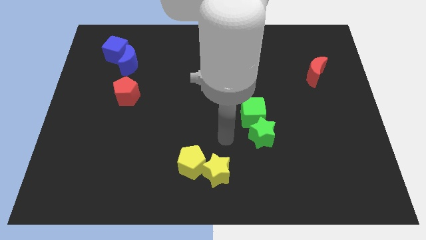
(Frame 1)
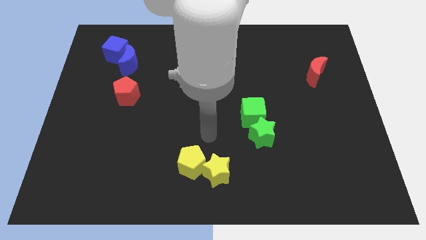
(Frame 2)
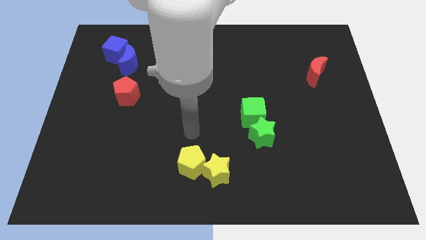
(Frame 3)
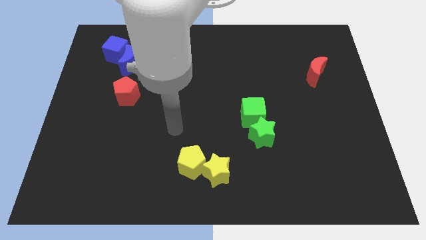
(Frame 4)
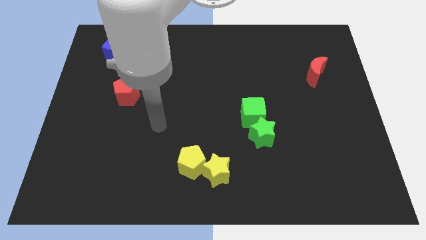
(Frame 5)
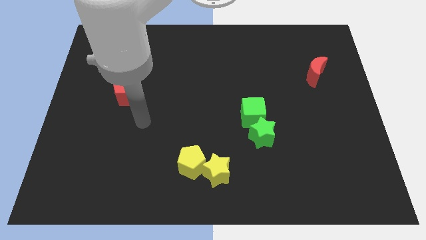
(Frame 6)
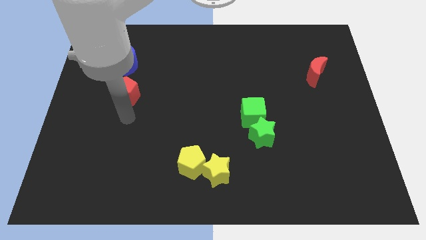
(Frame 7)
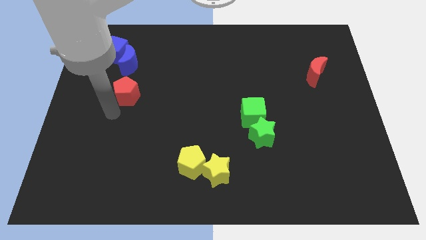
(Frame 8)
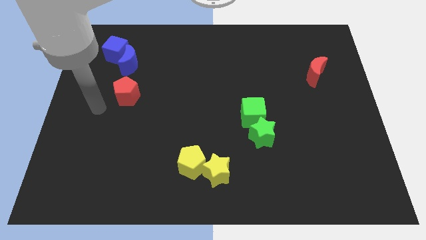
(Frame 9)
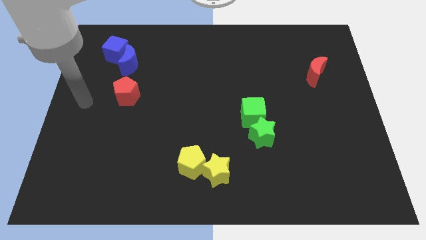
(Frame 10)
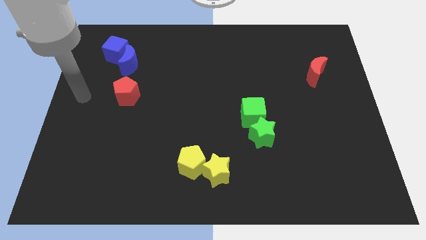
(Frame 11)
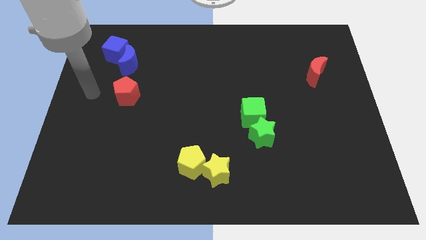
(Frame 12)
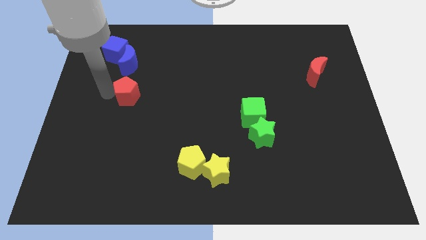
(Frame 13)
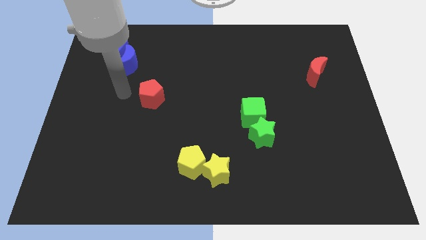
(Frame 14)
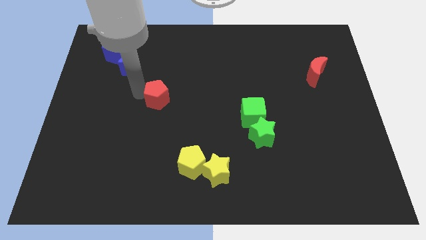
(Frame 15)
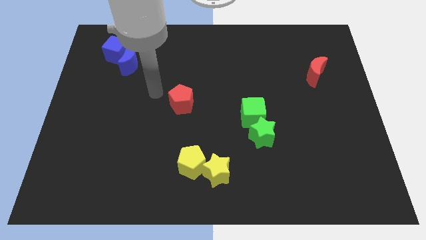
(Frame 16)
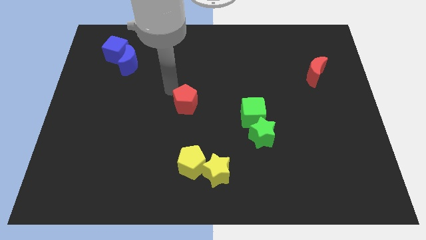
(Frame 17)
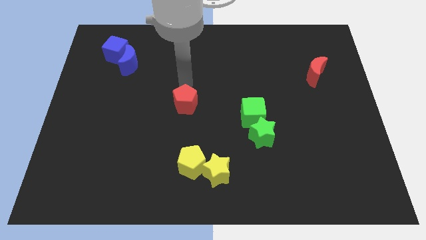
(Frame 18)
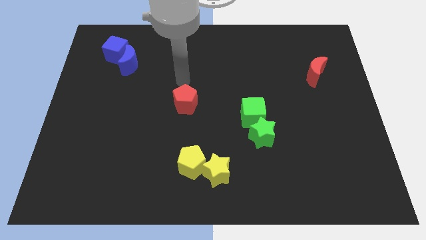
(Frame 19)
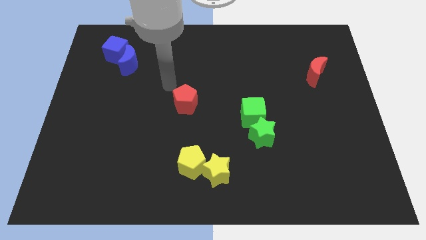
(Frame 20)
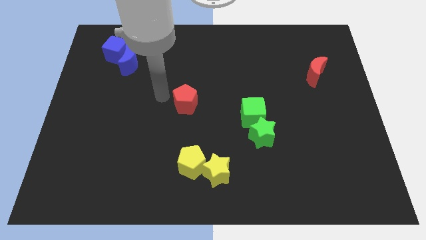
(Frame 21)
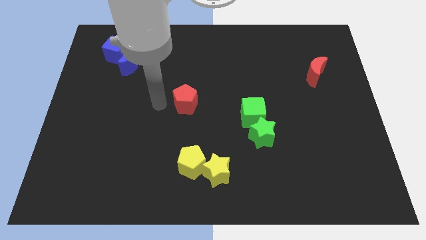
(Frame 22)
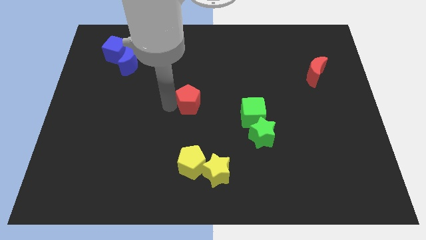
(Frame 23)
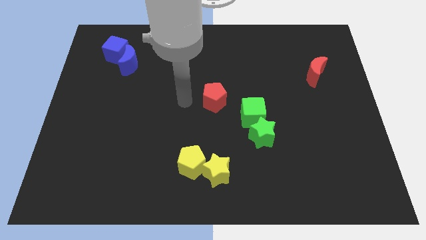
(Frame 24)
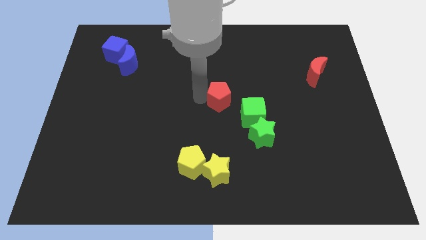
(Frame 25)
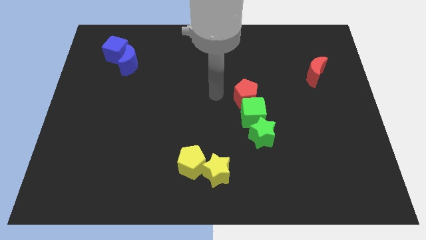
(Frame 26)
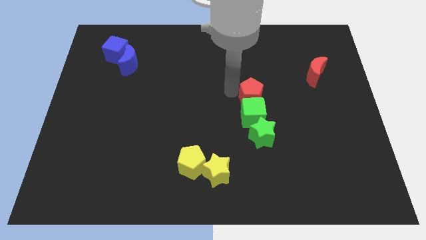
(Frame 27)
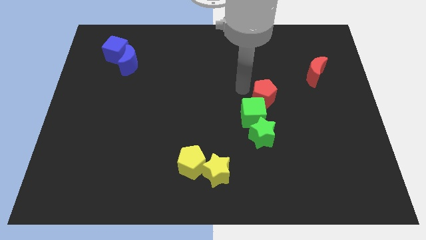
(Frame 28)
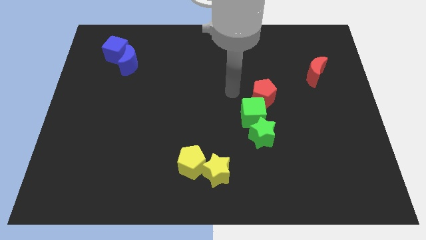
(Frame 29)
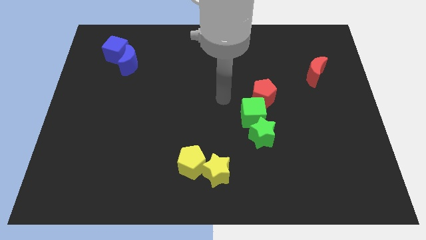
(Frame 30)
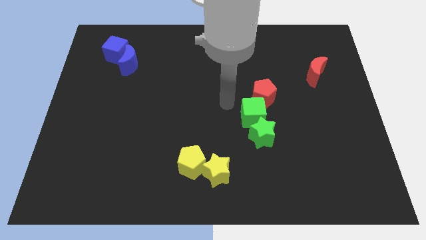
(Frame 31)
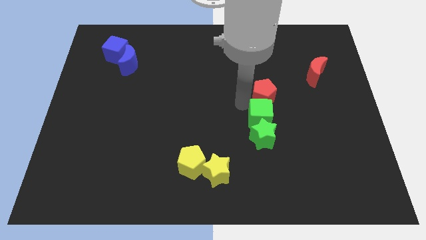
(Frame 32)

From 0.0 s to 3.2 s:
place the red pentagon above the green cube

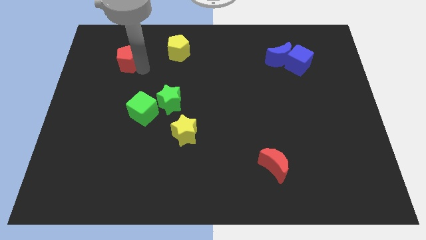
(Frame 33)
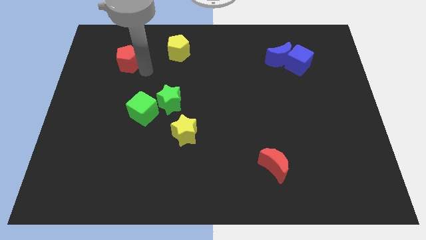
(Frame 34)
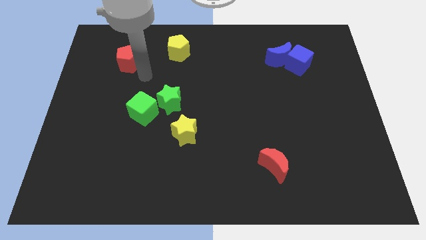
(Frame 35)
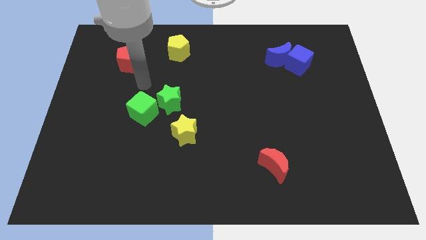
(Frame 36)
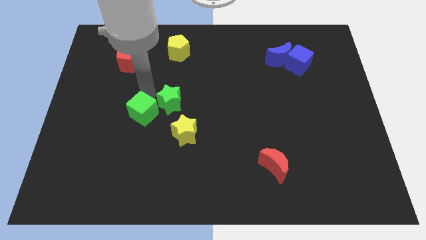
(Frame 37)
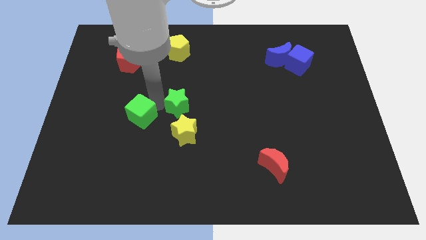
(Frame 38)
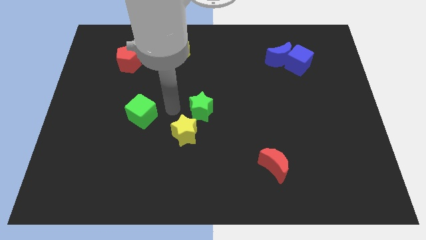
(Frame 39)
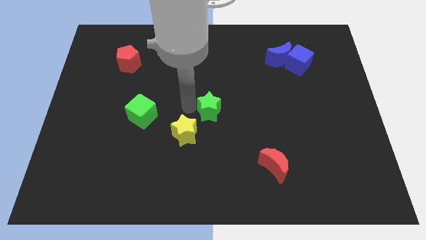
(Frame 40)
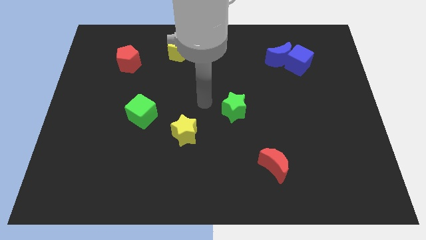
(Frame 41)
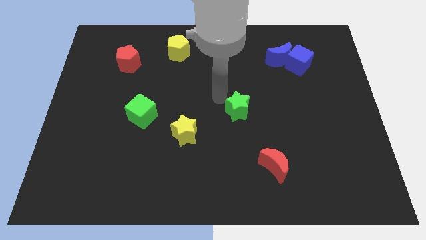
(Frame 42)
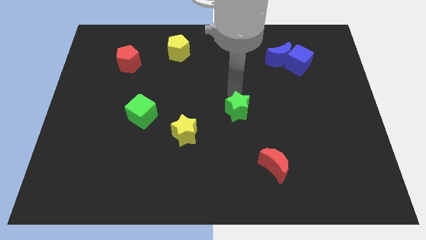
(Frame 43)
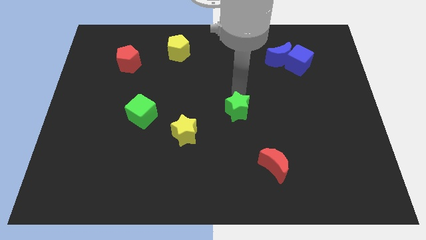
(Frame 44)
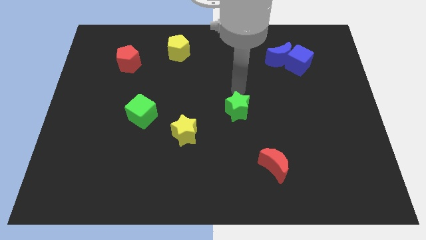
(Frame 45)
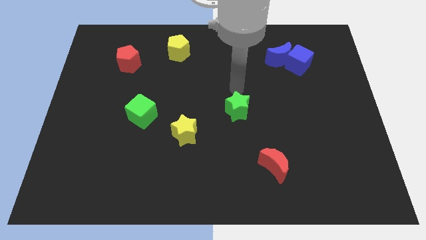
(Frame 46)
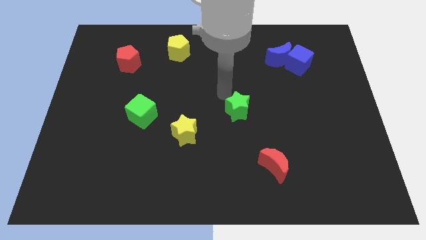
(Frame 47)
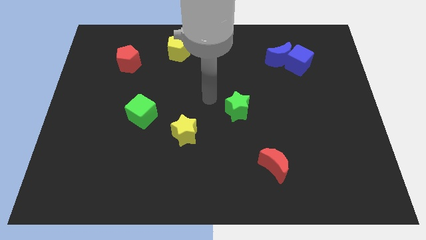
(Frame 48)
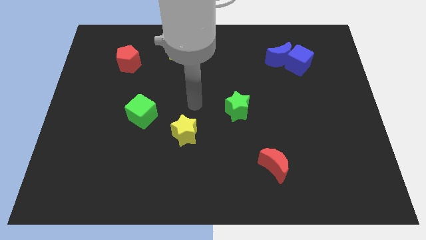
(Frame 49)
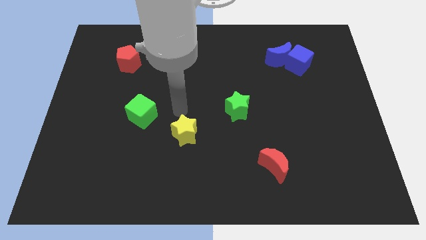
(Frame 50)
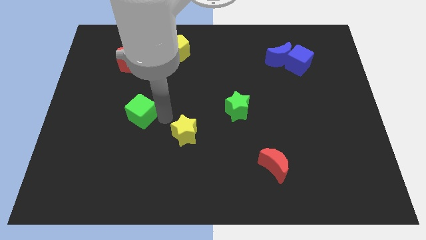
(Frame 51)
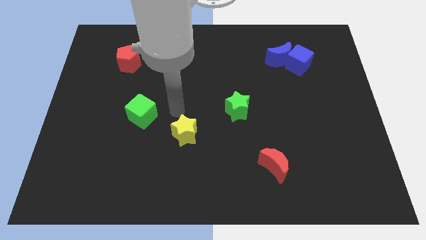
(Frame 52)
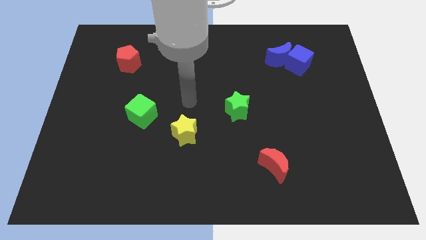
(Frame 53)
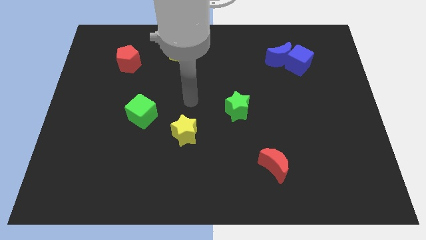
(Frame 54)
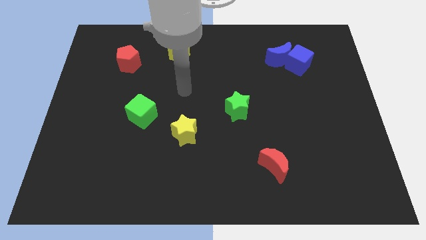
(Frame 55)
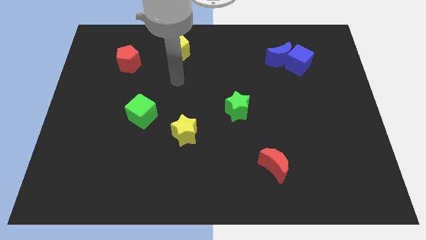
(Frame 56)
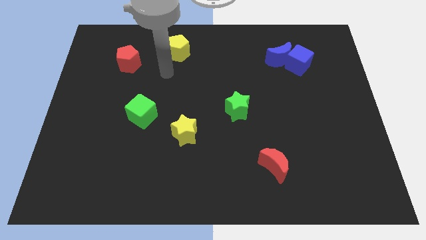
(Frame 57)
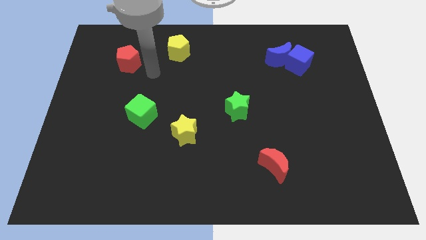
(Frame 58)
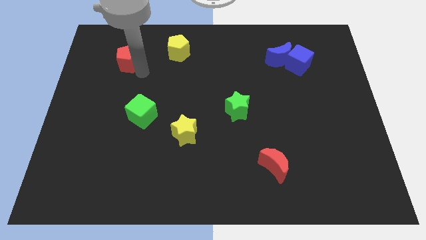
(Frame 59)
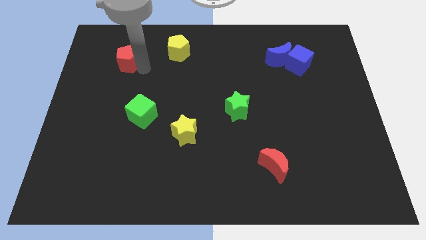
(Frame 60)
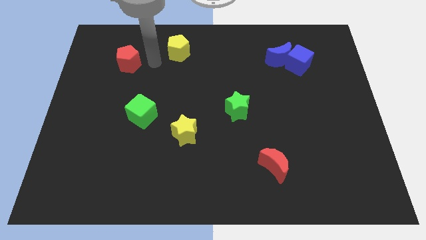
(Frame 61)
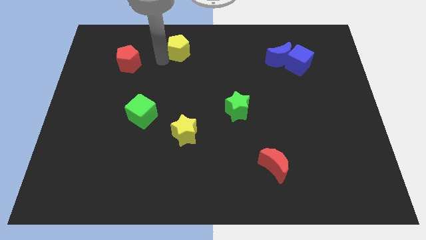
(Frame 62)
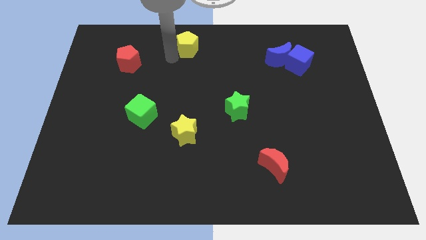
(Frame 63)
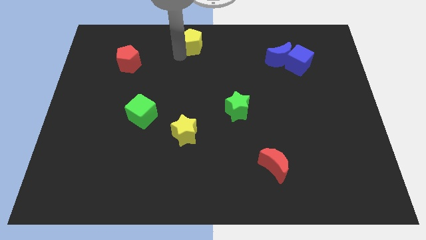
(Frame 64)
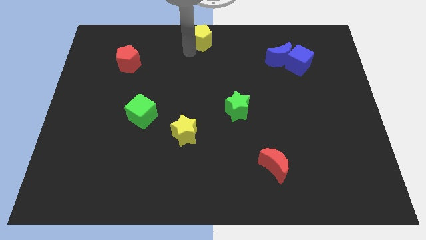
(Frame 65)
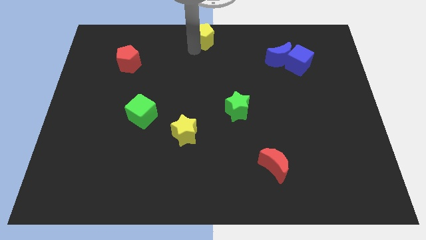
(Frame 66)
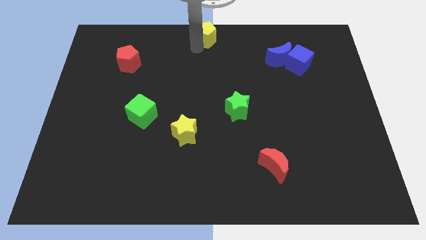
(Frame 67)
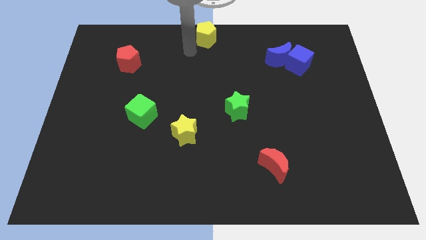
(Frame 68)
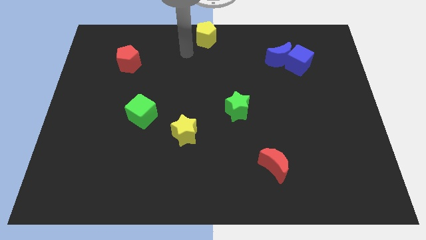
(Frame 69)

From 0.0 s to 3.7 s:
push the green star and yellow pentagon in different directions

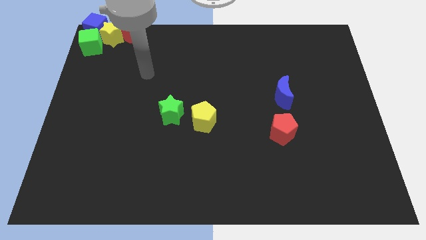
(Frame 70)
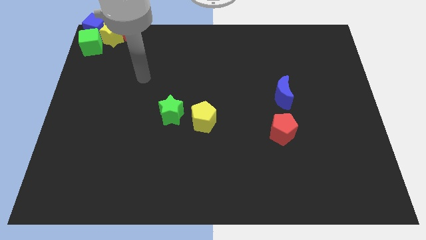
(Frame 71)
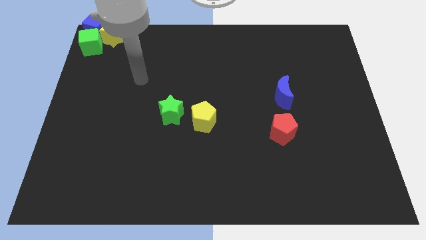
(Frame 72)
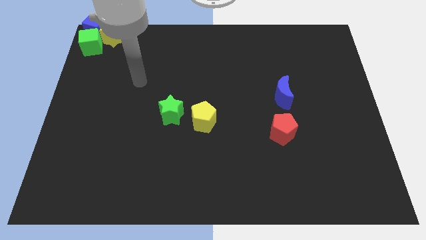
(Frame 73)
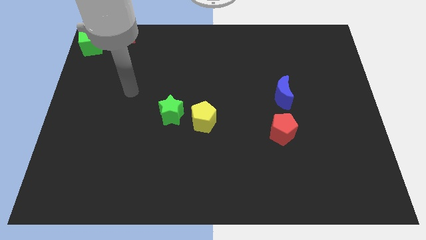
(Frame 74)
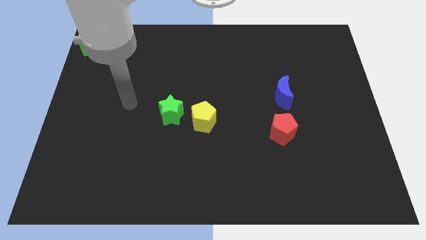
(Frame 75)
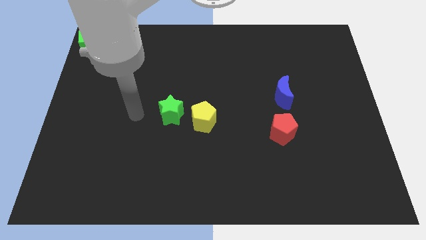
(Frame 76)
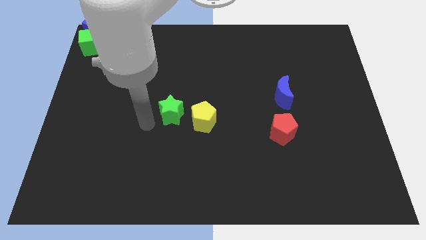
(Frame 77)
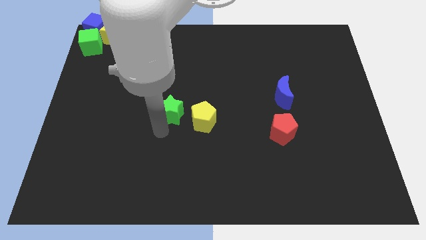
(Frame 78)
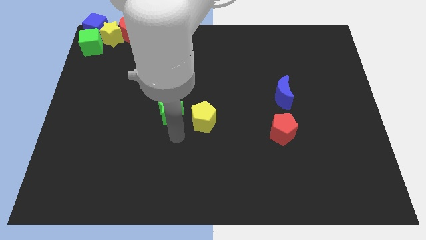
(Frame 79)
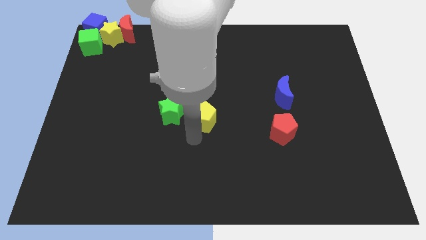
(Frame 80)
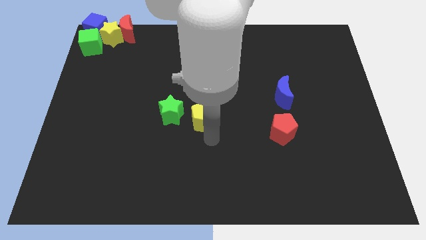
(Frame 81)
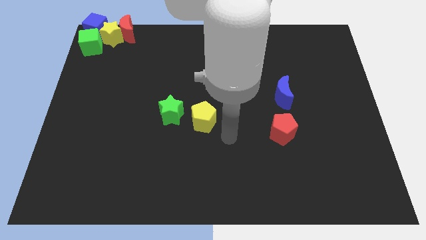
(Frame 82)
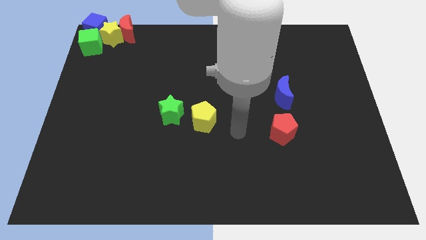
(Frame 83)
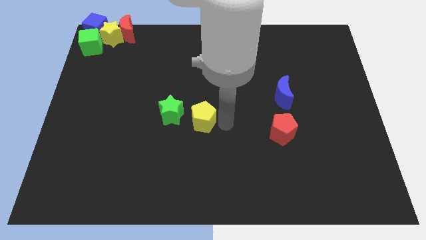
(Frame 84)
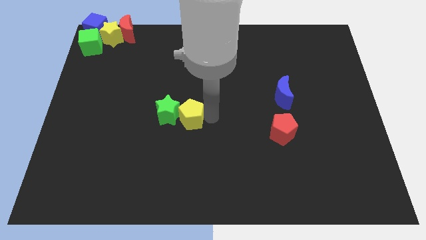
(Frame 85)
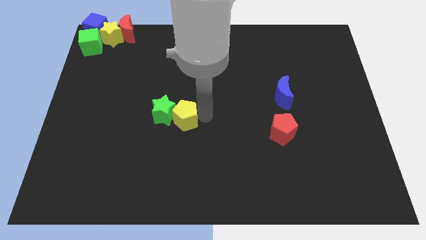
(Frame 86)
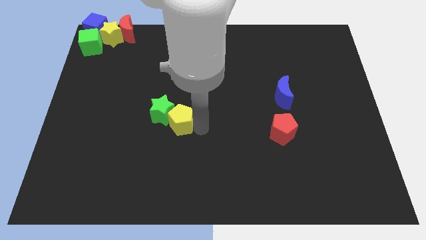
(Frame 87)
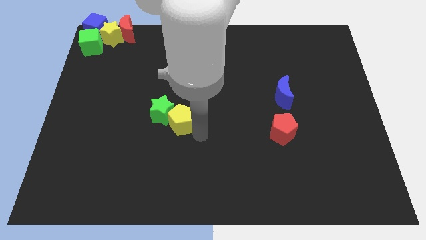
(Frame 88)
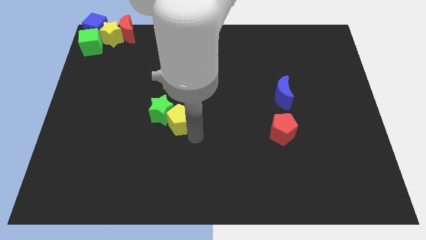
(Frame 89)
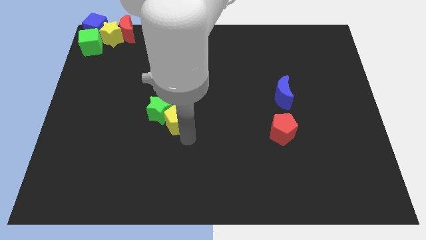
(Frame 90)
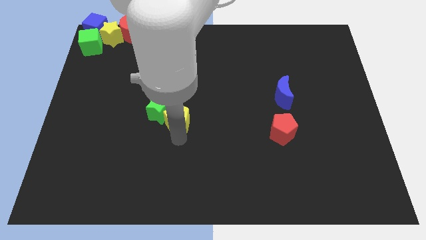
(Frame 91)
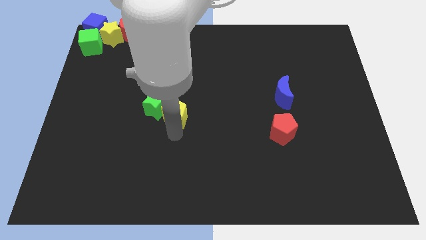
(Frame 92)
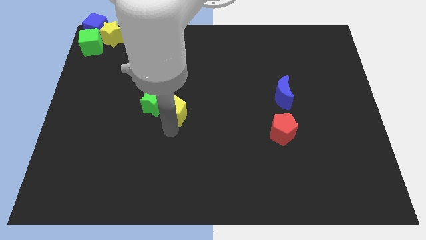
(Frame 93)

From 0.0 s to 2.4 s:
push green star with yellow pentagon
